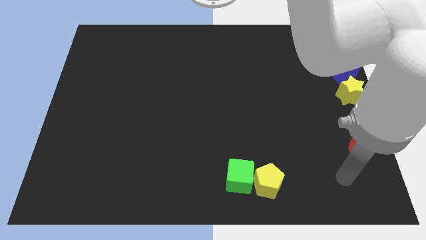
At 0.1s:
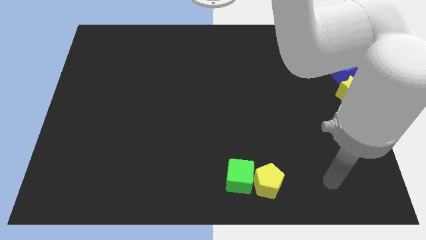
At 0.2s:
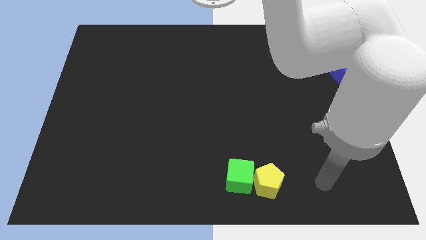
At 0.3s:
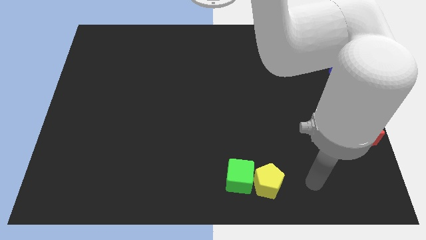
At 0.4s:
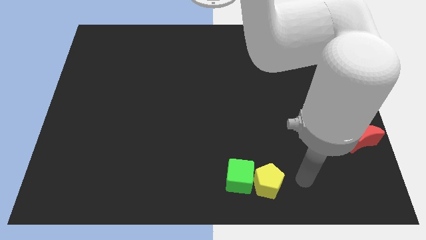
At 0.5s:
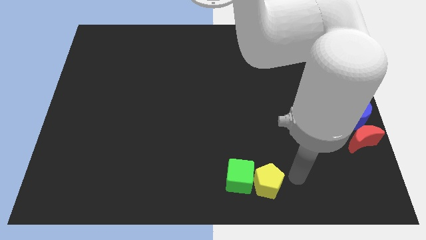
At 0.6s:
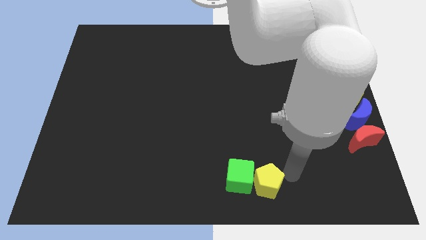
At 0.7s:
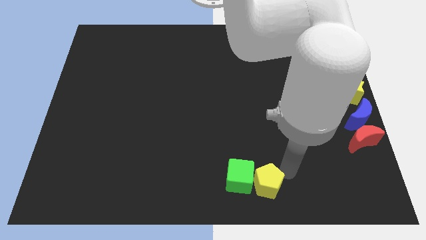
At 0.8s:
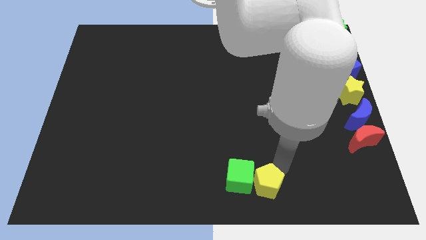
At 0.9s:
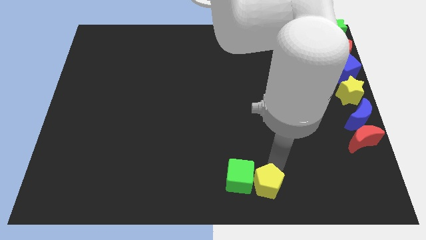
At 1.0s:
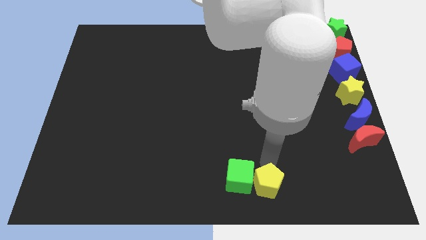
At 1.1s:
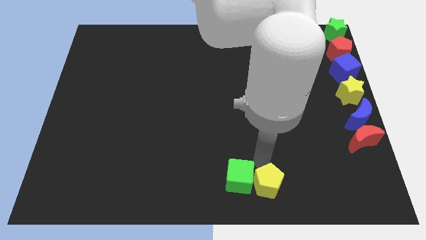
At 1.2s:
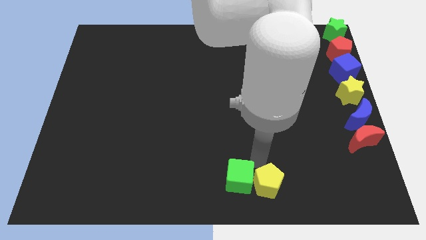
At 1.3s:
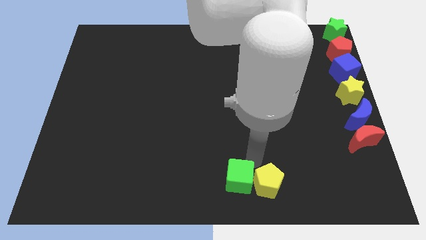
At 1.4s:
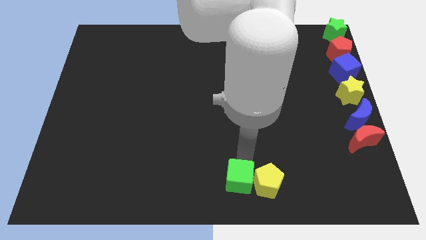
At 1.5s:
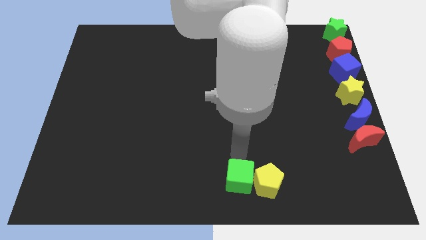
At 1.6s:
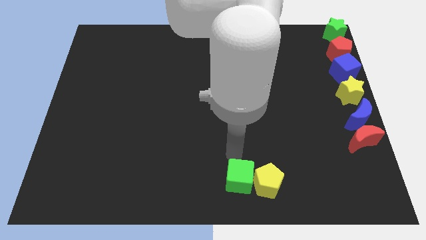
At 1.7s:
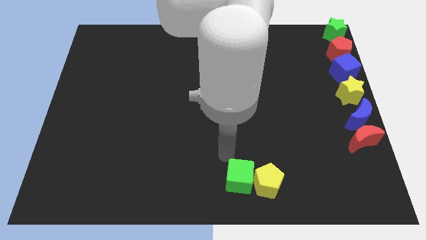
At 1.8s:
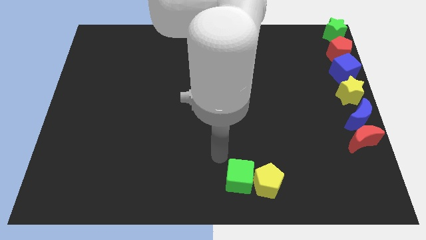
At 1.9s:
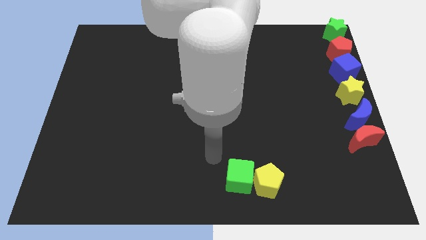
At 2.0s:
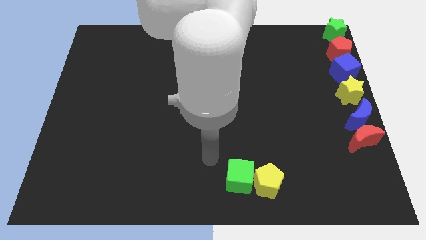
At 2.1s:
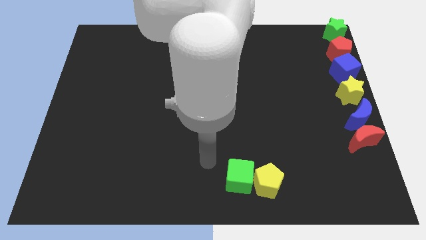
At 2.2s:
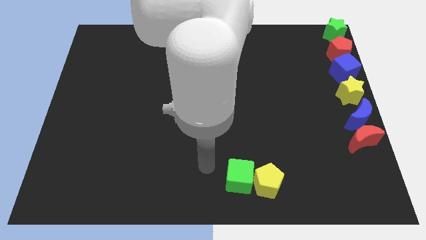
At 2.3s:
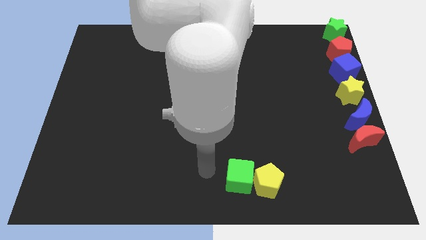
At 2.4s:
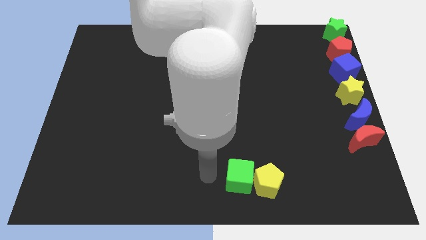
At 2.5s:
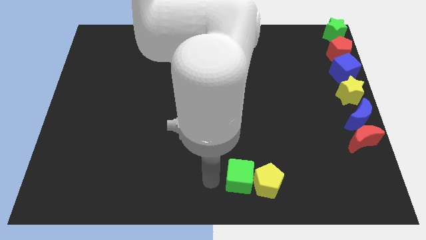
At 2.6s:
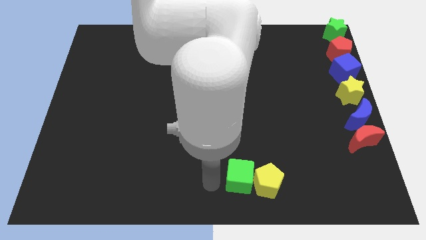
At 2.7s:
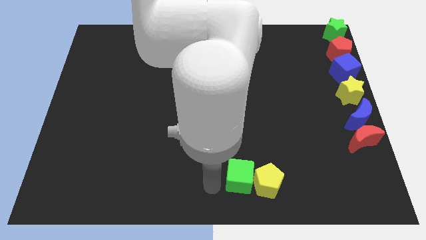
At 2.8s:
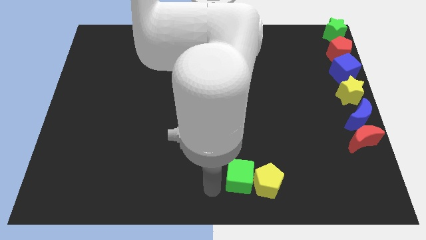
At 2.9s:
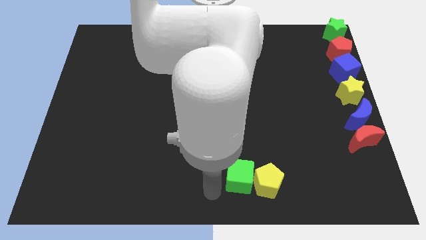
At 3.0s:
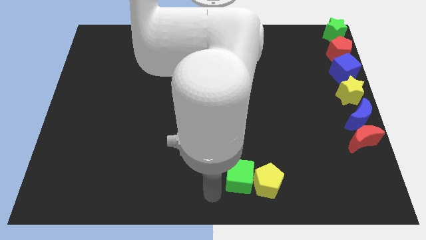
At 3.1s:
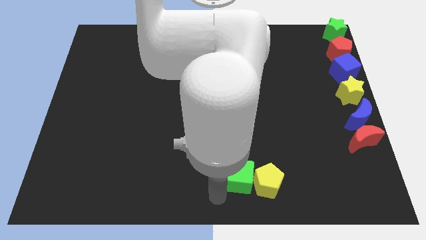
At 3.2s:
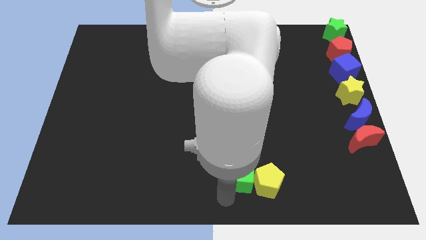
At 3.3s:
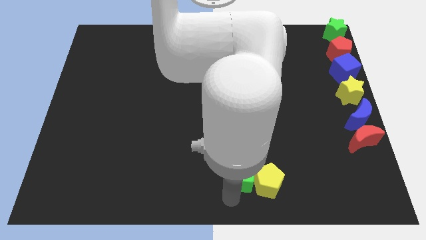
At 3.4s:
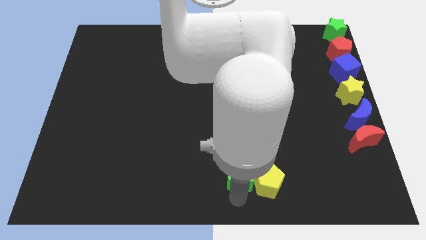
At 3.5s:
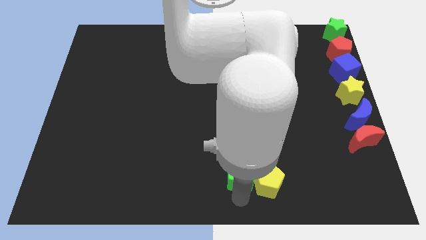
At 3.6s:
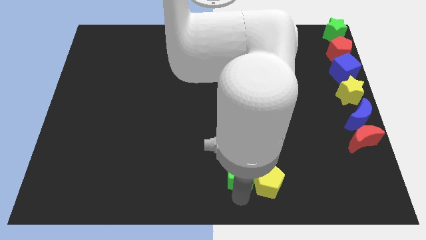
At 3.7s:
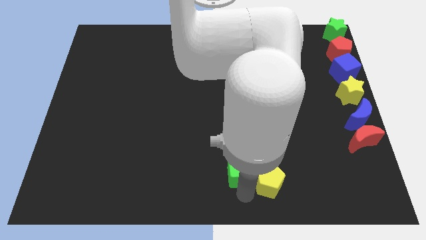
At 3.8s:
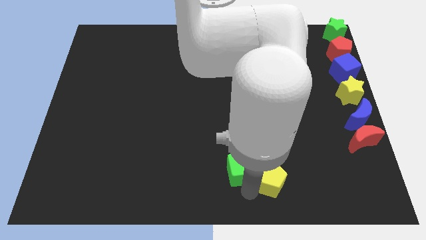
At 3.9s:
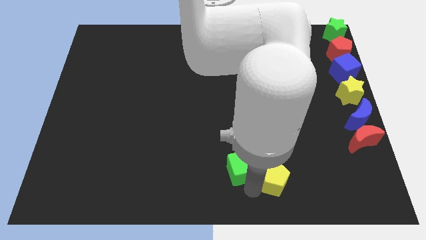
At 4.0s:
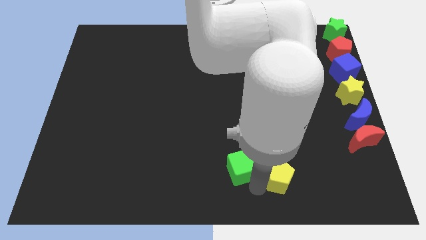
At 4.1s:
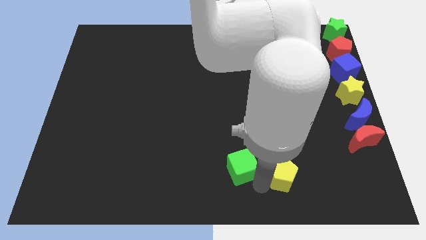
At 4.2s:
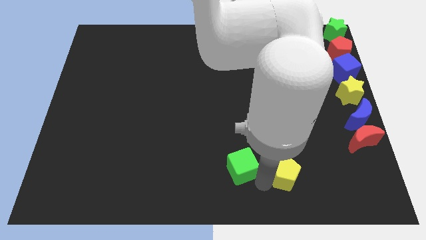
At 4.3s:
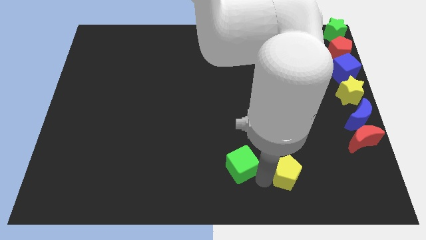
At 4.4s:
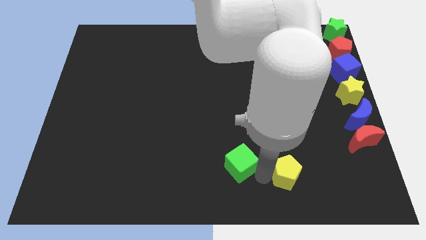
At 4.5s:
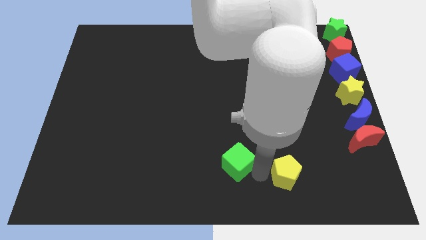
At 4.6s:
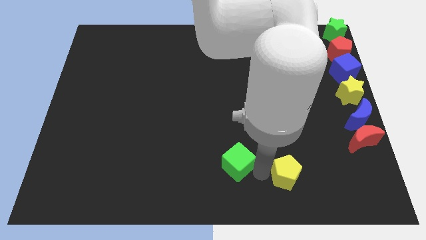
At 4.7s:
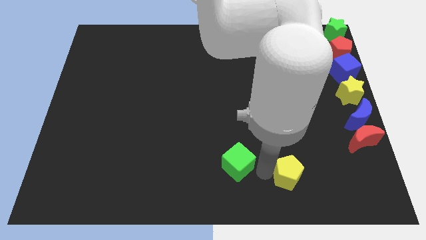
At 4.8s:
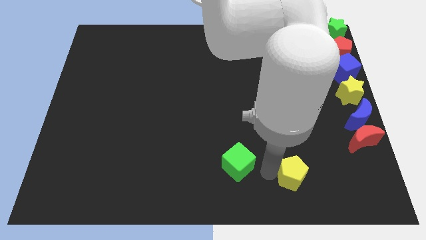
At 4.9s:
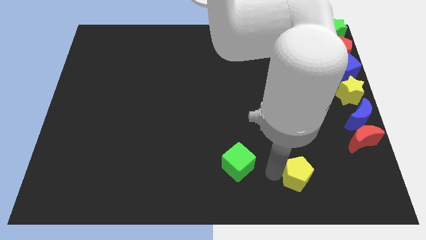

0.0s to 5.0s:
move the yellow pentagon away from the green cube

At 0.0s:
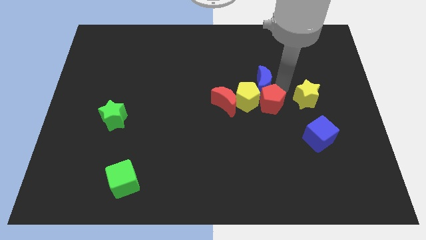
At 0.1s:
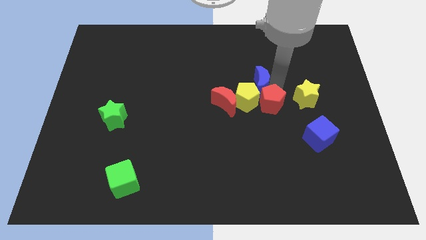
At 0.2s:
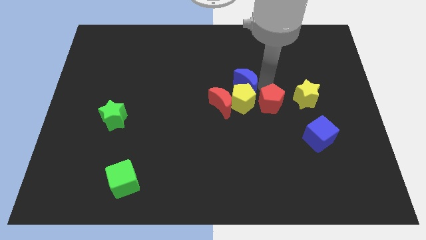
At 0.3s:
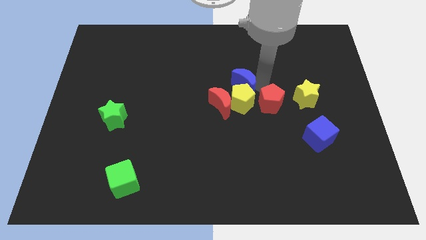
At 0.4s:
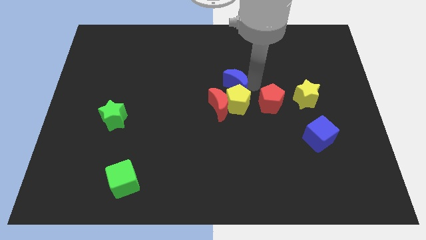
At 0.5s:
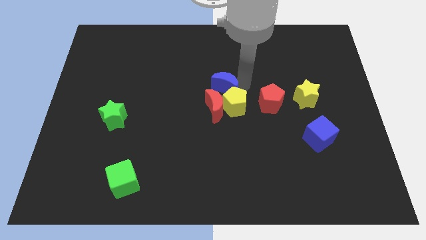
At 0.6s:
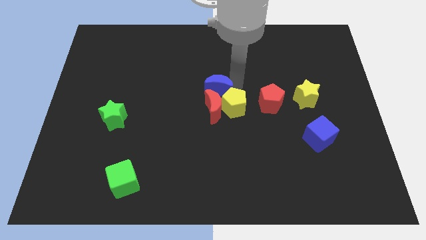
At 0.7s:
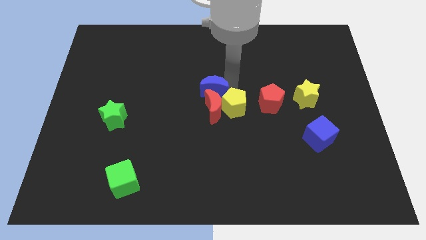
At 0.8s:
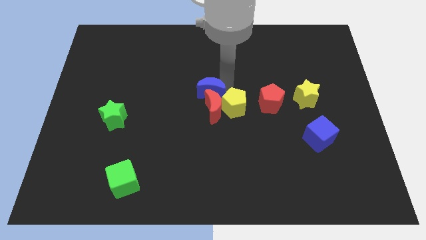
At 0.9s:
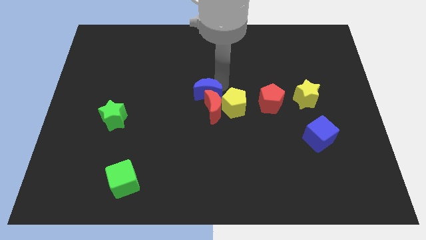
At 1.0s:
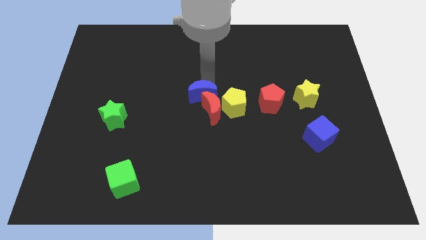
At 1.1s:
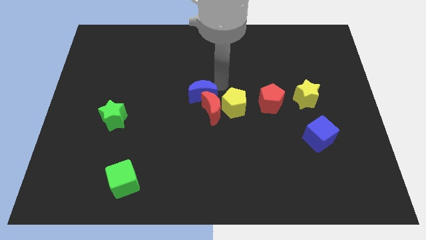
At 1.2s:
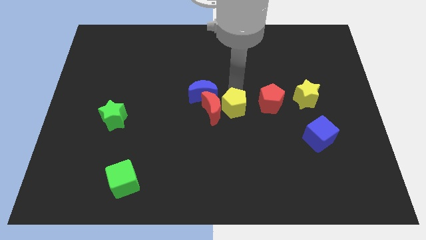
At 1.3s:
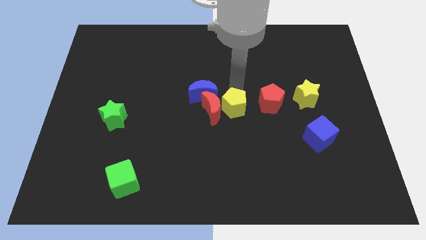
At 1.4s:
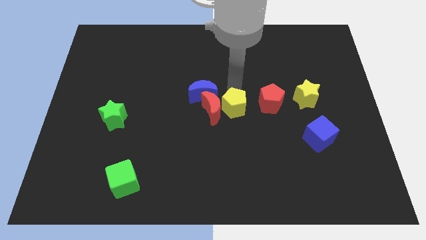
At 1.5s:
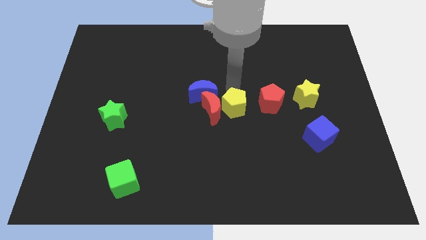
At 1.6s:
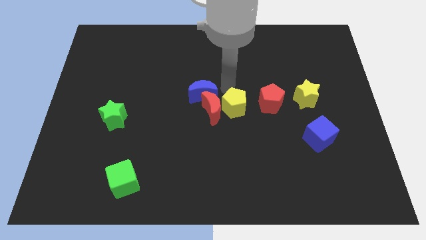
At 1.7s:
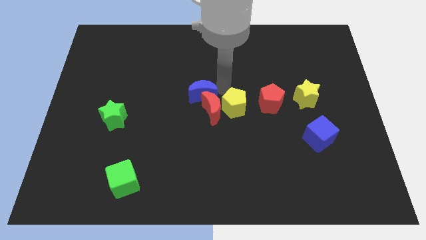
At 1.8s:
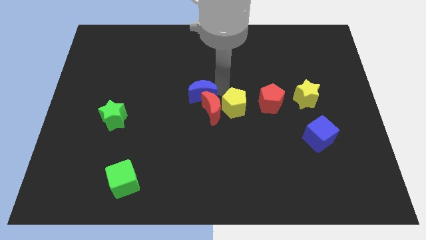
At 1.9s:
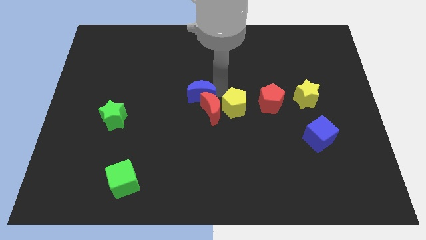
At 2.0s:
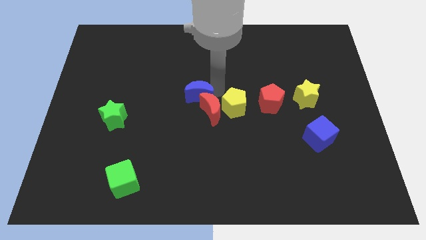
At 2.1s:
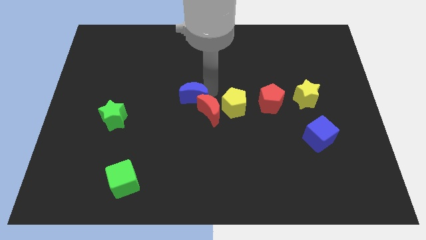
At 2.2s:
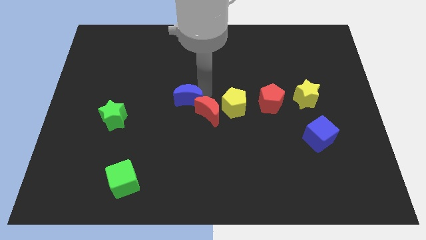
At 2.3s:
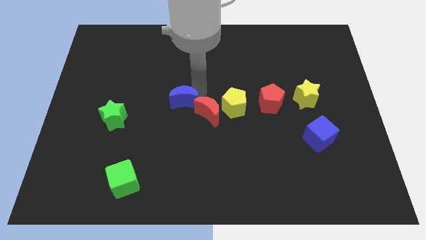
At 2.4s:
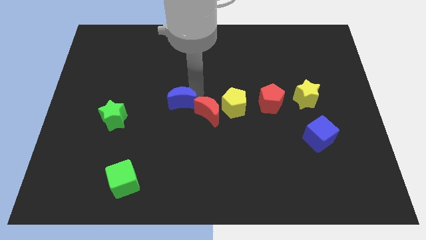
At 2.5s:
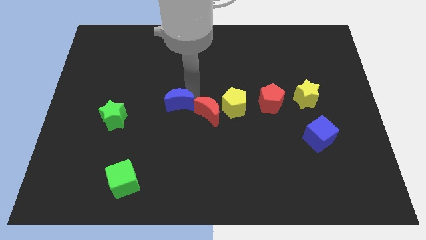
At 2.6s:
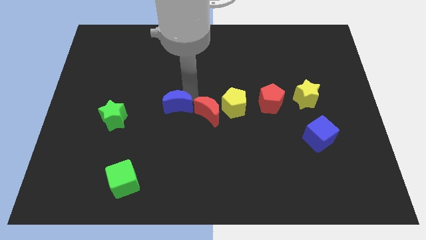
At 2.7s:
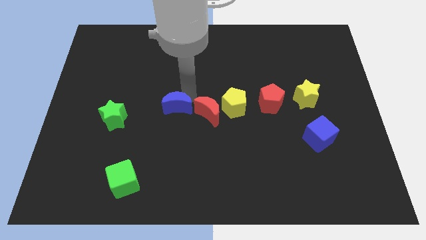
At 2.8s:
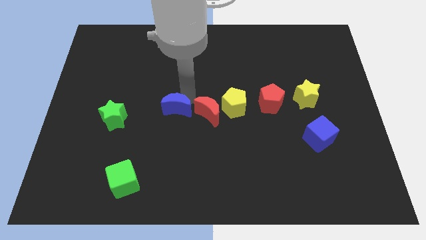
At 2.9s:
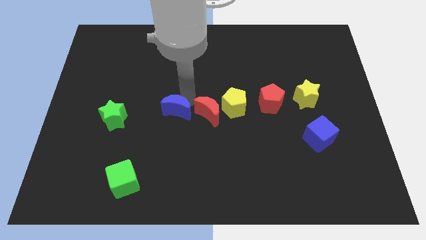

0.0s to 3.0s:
move the red moon with the blue moon

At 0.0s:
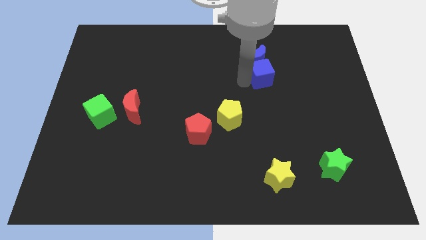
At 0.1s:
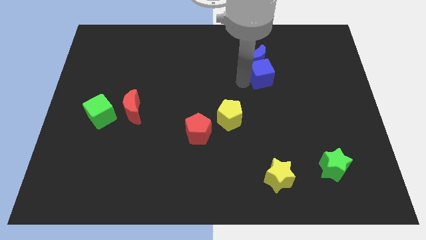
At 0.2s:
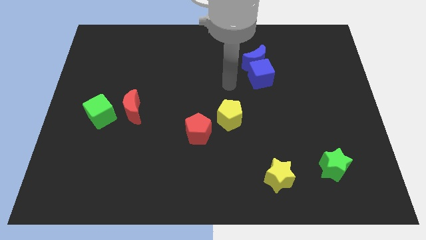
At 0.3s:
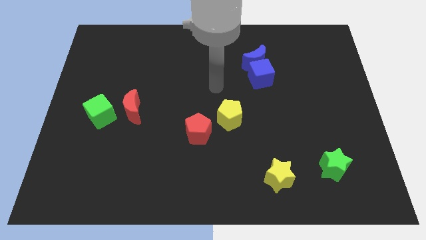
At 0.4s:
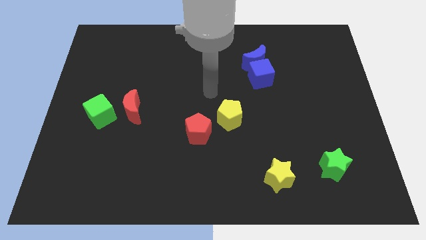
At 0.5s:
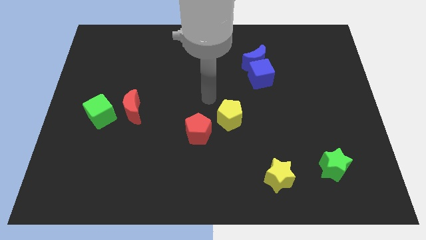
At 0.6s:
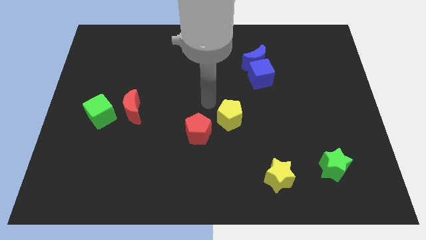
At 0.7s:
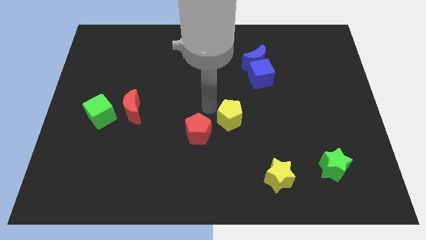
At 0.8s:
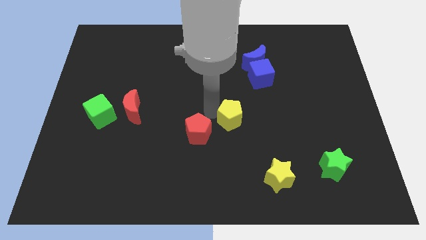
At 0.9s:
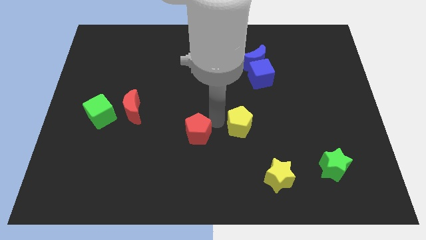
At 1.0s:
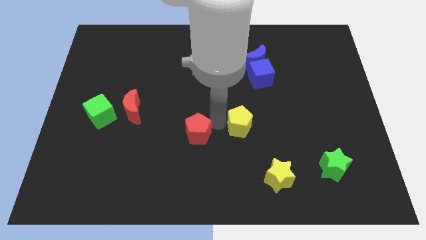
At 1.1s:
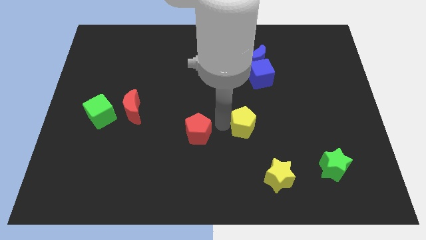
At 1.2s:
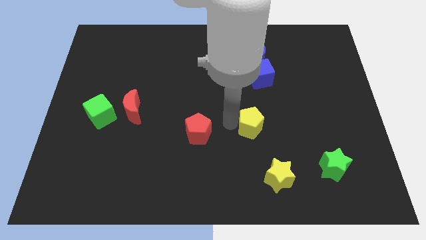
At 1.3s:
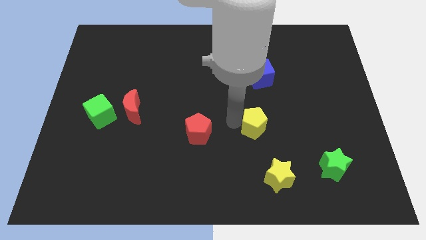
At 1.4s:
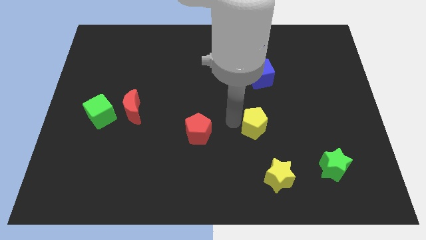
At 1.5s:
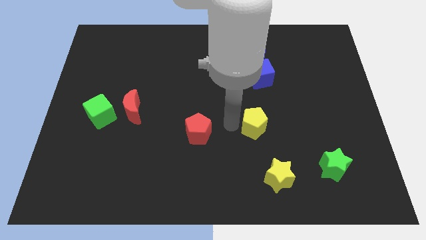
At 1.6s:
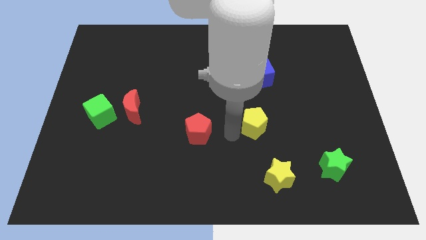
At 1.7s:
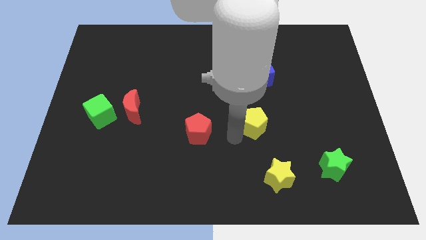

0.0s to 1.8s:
move the yellow pentagon to the right of the red pentagon
